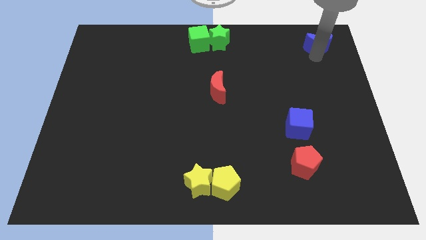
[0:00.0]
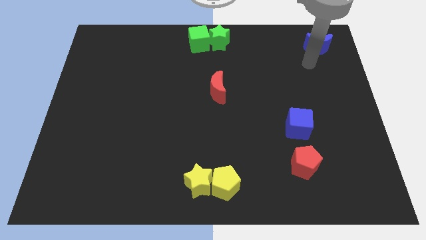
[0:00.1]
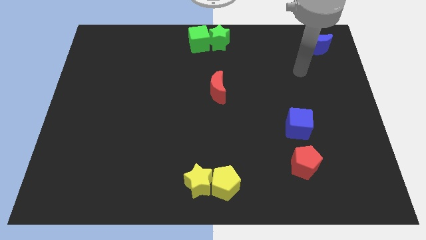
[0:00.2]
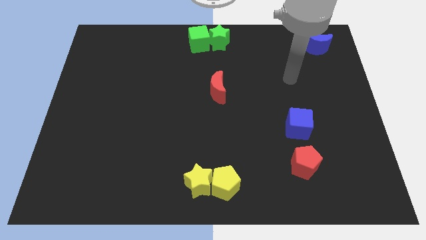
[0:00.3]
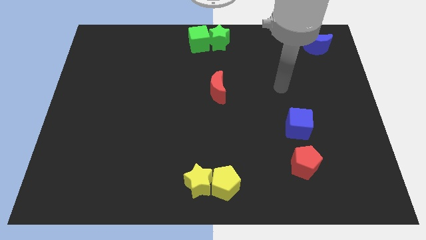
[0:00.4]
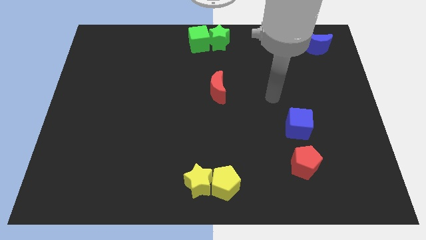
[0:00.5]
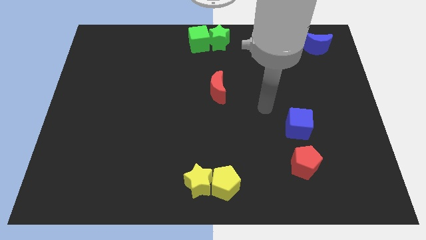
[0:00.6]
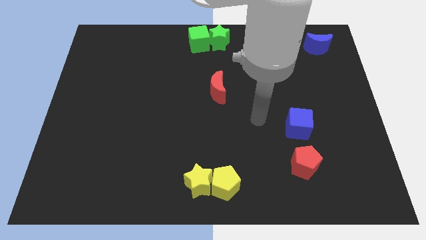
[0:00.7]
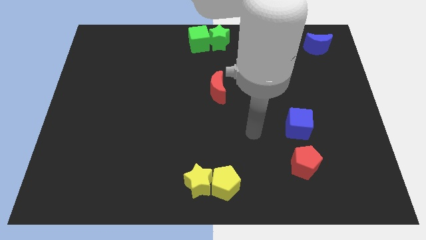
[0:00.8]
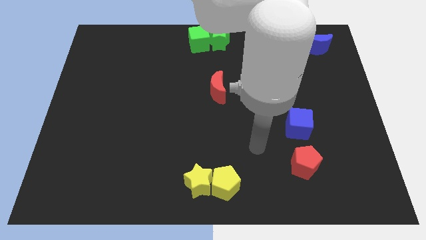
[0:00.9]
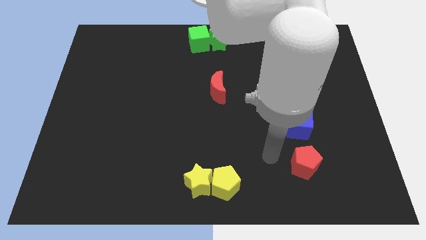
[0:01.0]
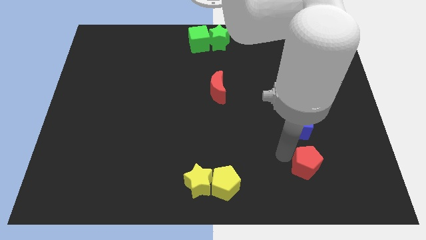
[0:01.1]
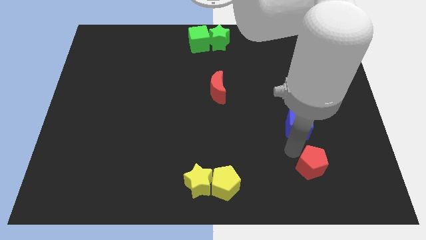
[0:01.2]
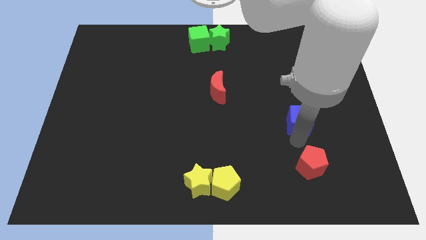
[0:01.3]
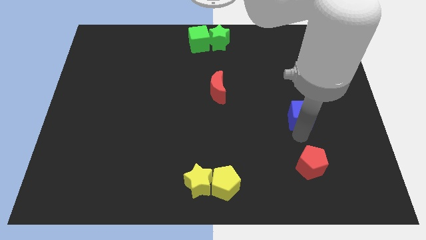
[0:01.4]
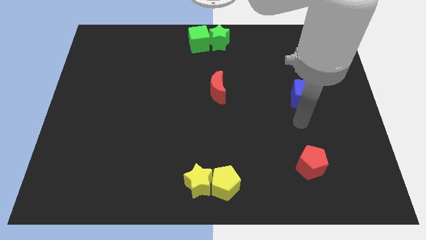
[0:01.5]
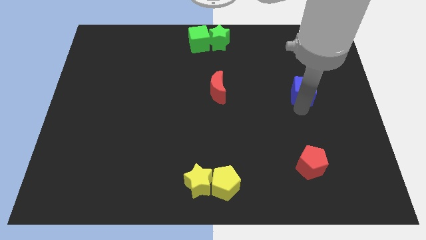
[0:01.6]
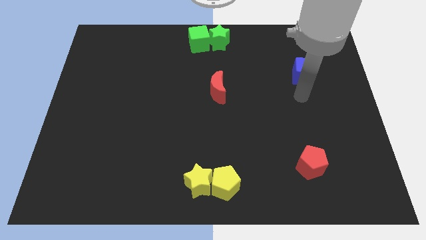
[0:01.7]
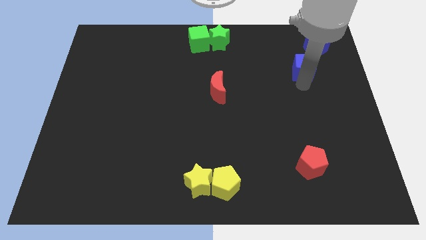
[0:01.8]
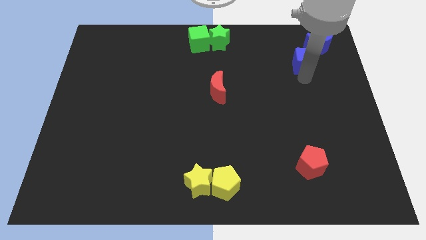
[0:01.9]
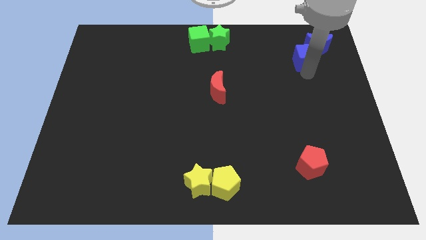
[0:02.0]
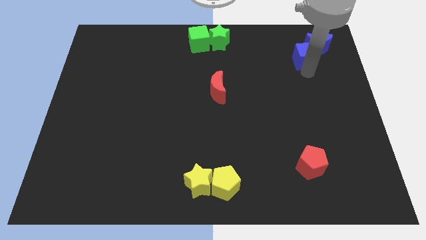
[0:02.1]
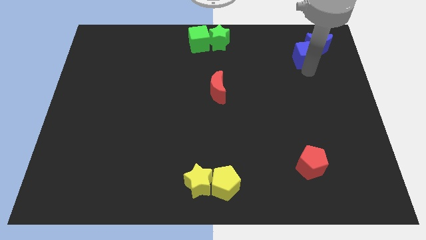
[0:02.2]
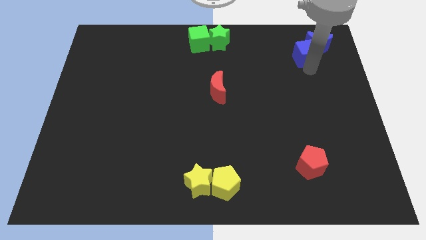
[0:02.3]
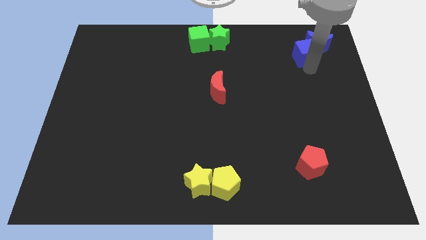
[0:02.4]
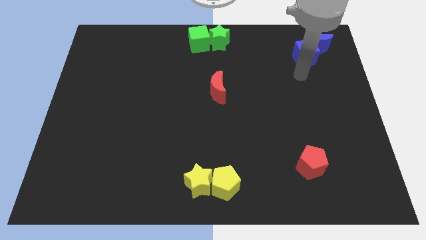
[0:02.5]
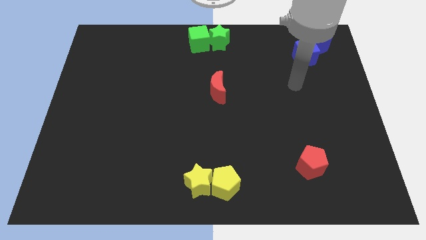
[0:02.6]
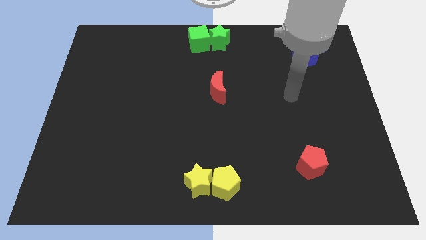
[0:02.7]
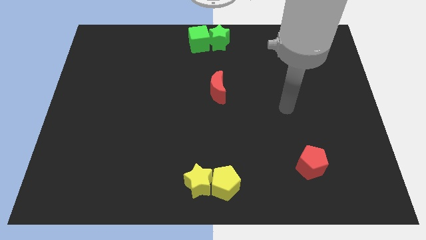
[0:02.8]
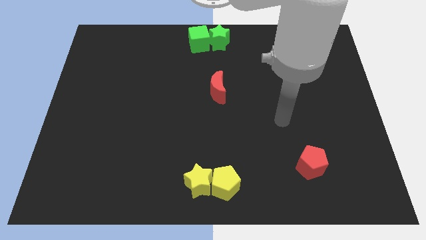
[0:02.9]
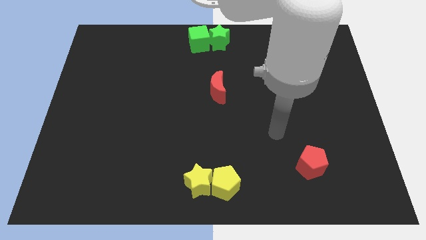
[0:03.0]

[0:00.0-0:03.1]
move the blue cube below the blue crescent

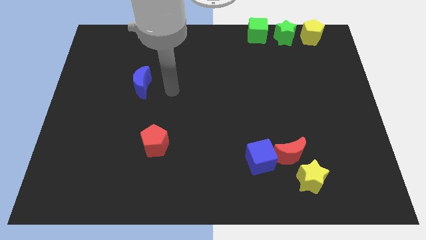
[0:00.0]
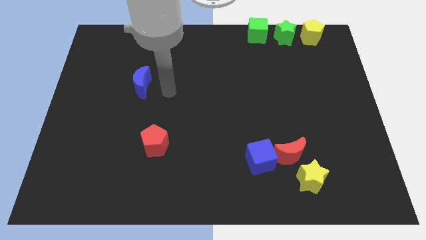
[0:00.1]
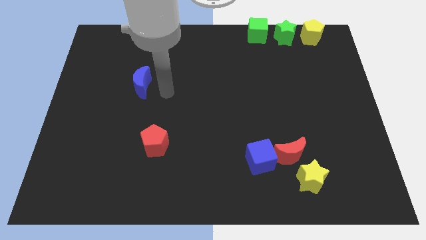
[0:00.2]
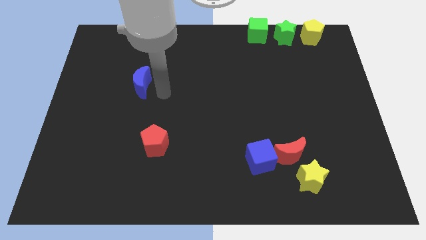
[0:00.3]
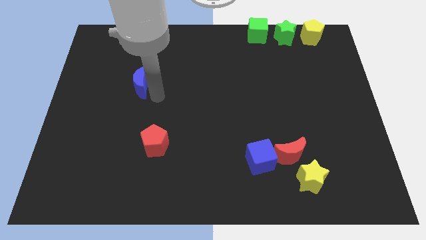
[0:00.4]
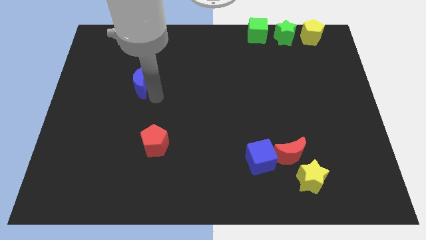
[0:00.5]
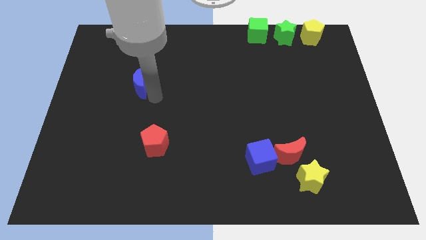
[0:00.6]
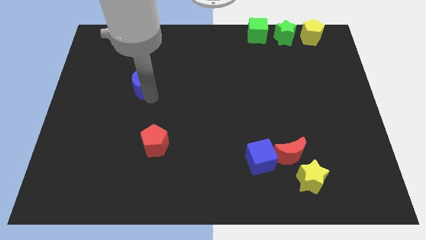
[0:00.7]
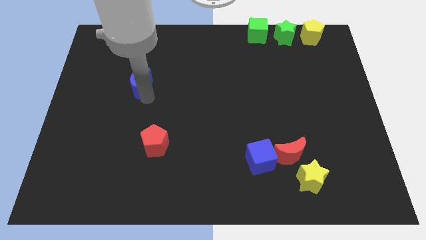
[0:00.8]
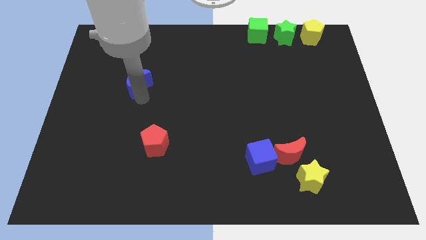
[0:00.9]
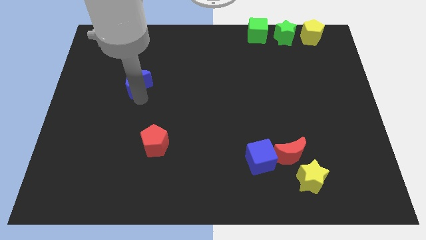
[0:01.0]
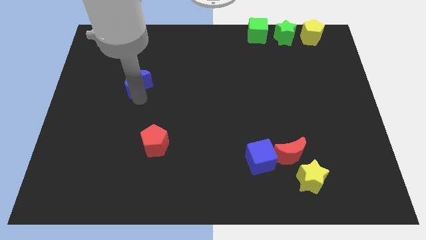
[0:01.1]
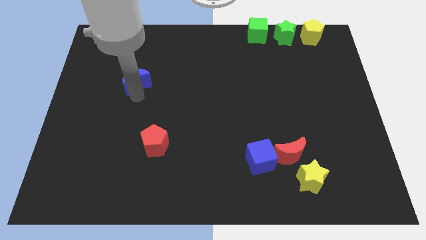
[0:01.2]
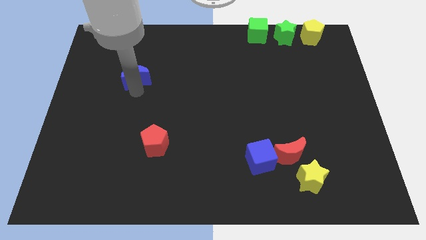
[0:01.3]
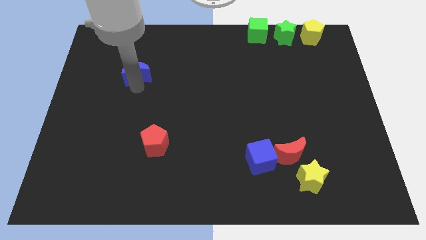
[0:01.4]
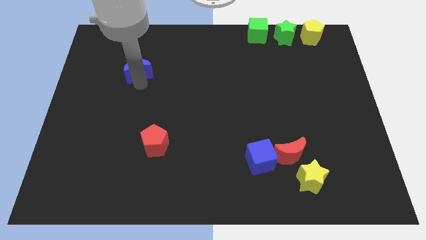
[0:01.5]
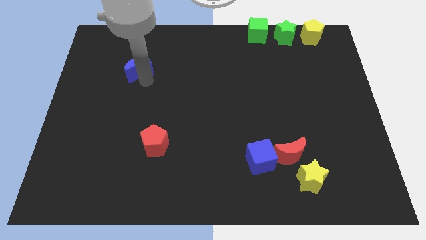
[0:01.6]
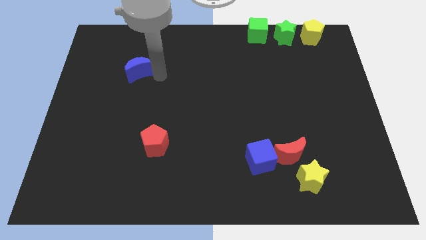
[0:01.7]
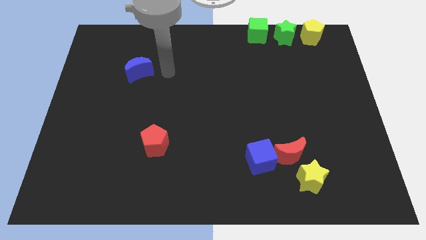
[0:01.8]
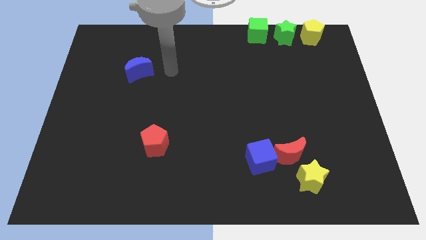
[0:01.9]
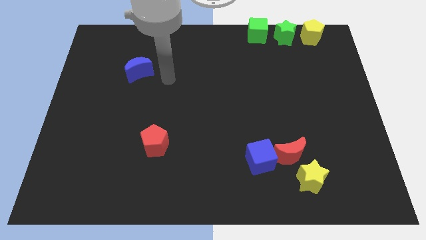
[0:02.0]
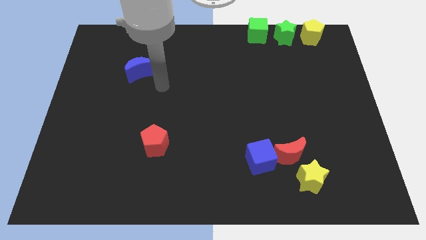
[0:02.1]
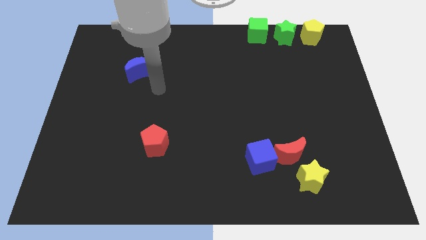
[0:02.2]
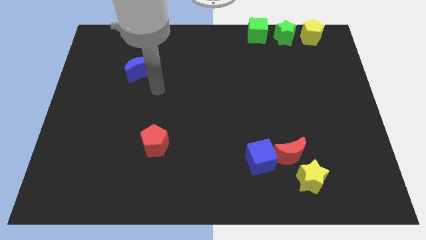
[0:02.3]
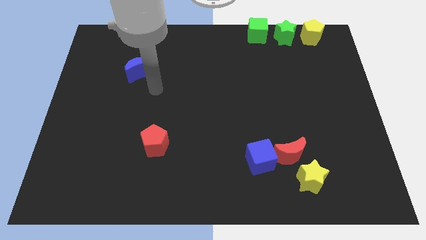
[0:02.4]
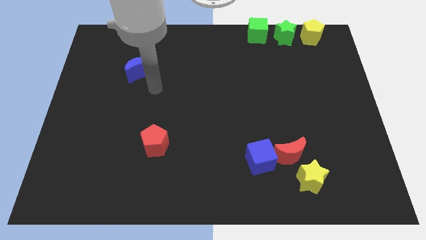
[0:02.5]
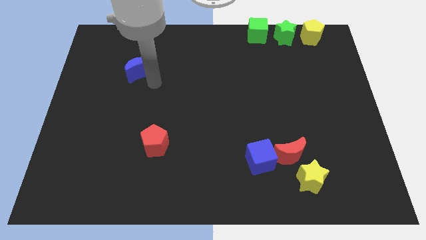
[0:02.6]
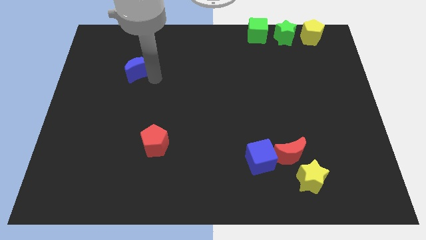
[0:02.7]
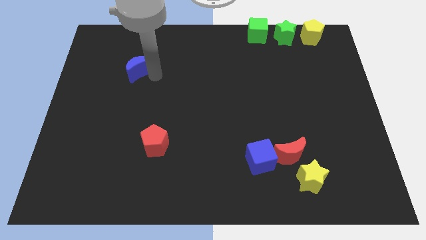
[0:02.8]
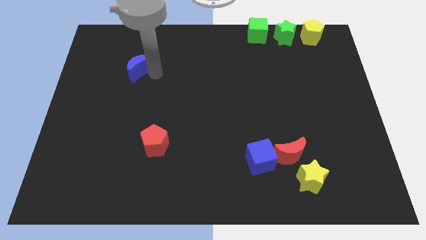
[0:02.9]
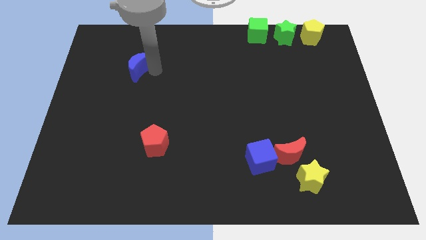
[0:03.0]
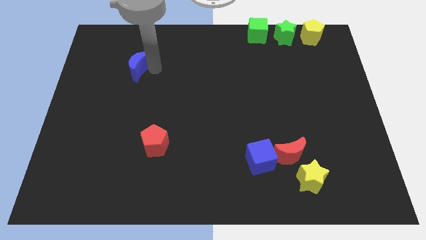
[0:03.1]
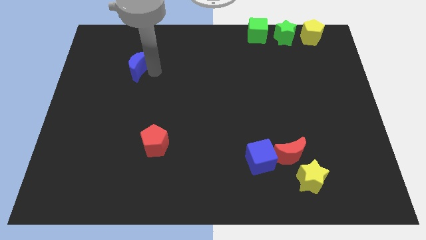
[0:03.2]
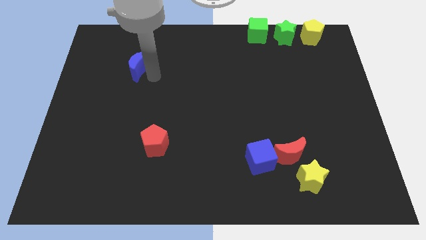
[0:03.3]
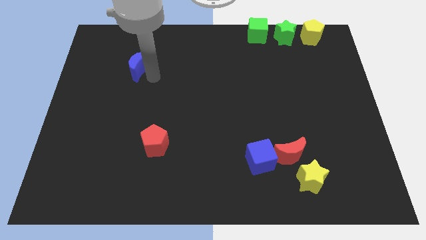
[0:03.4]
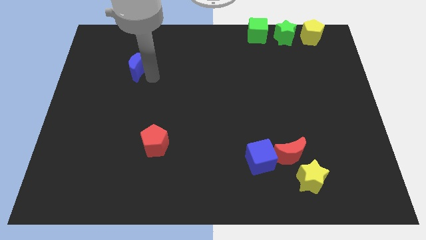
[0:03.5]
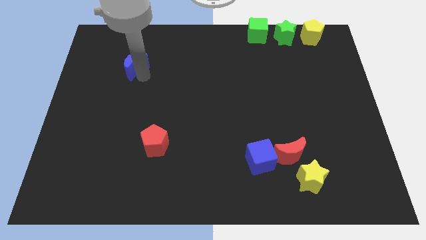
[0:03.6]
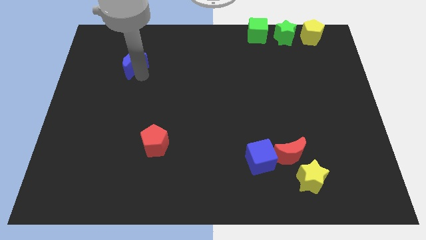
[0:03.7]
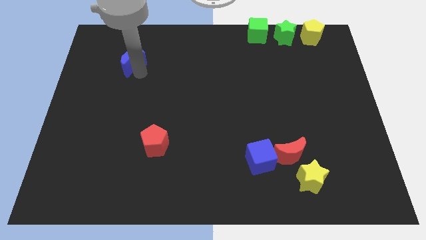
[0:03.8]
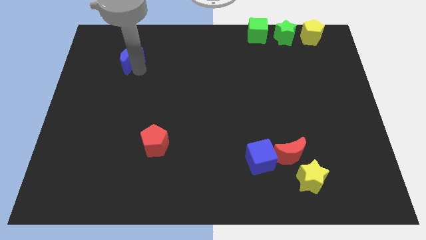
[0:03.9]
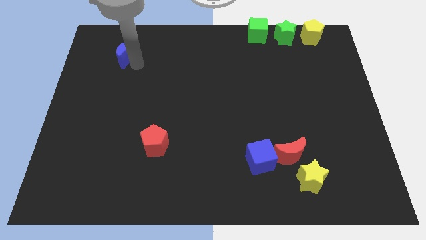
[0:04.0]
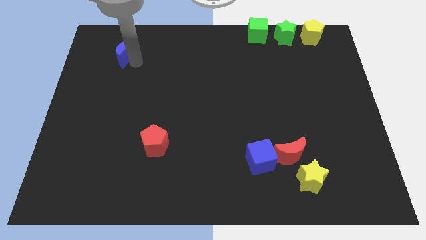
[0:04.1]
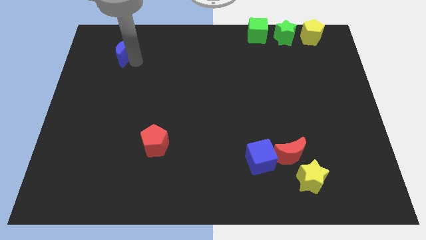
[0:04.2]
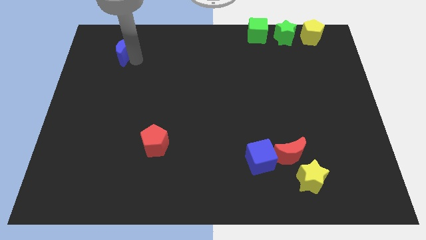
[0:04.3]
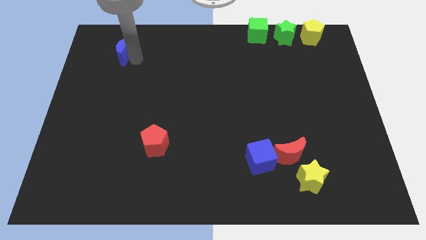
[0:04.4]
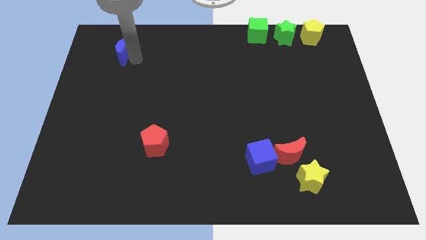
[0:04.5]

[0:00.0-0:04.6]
push the blue moon aside from the vertical top of red pentagon

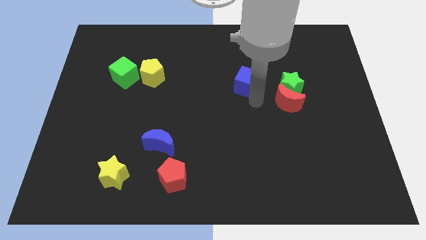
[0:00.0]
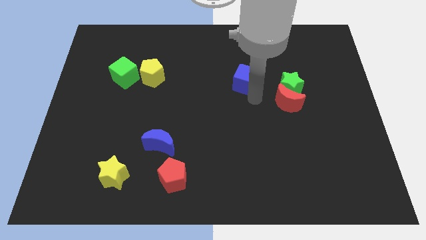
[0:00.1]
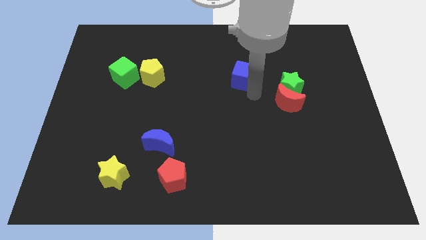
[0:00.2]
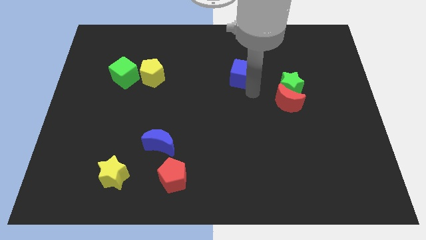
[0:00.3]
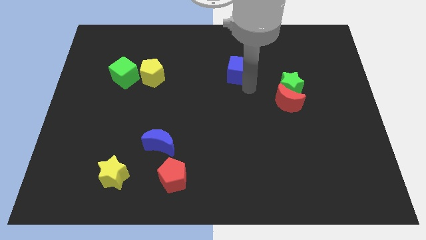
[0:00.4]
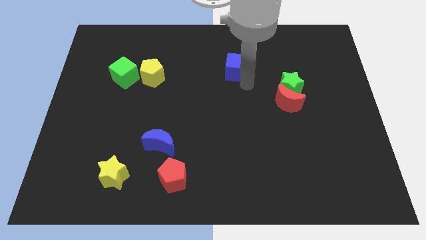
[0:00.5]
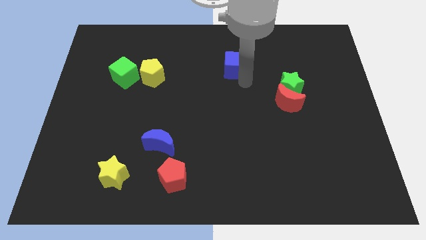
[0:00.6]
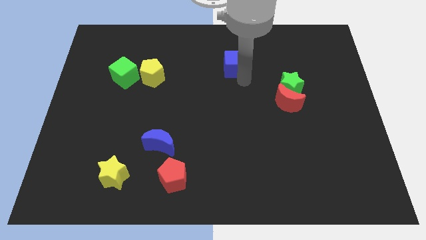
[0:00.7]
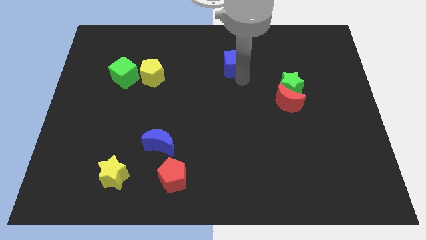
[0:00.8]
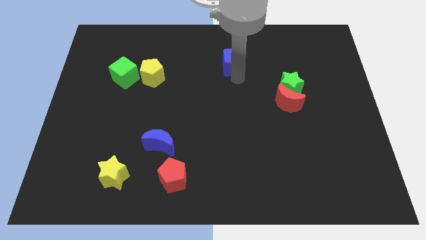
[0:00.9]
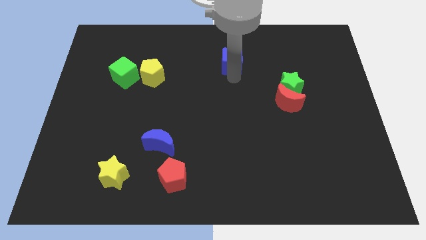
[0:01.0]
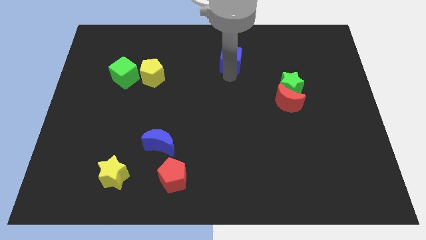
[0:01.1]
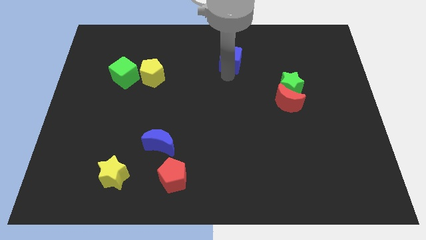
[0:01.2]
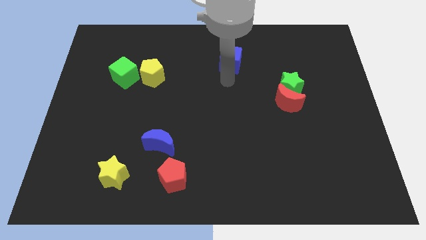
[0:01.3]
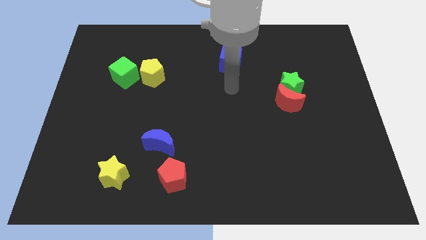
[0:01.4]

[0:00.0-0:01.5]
move blue cube to the top center of the board
